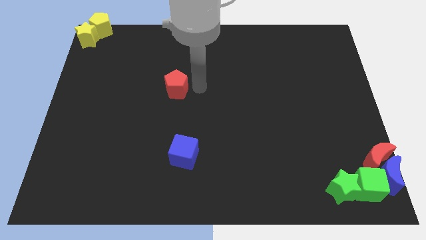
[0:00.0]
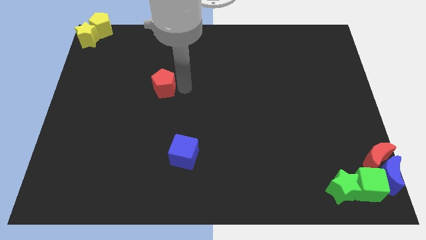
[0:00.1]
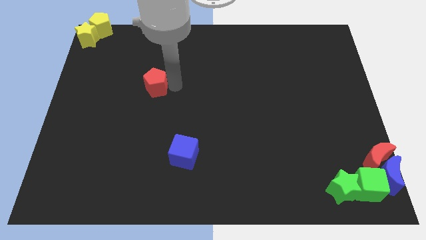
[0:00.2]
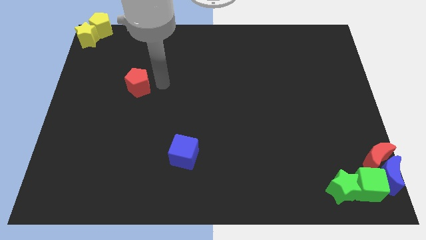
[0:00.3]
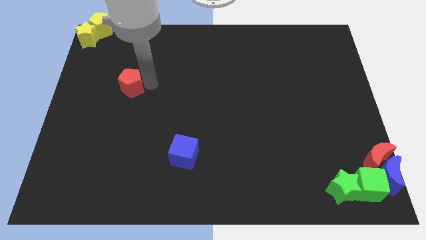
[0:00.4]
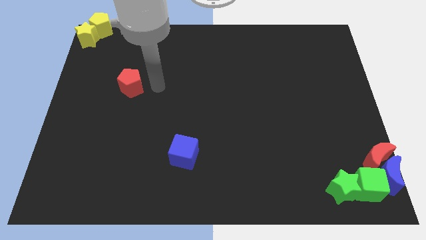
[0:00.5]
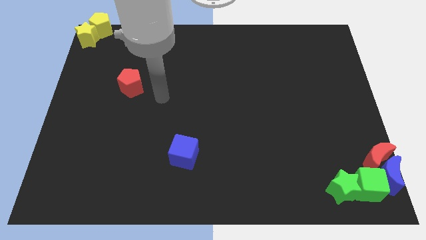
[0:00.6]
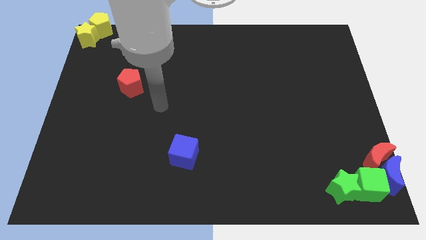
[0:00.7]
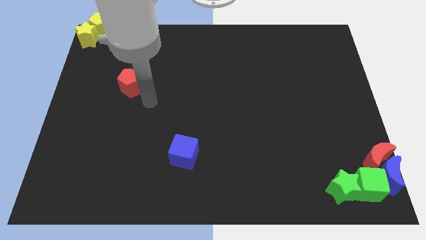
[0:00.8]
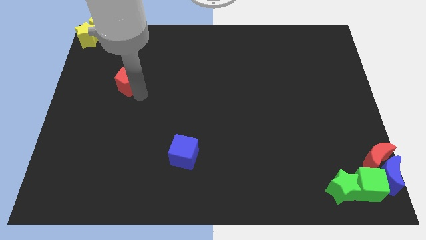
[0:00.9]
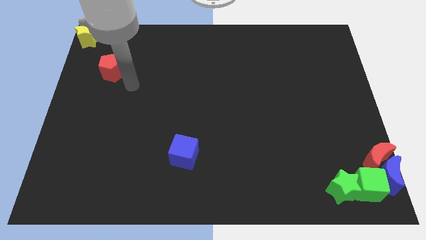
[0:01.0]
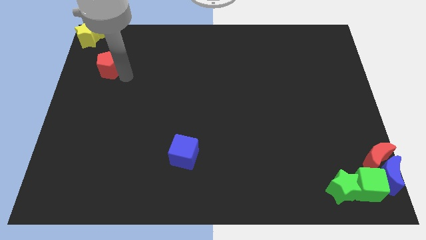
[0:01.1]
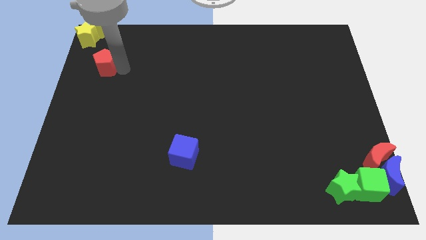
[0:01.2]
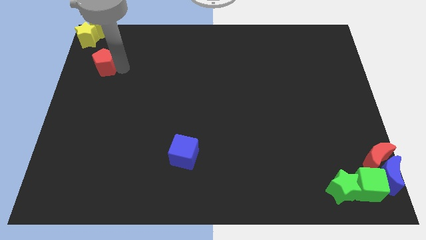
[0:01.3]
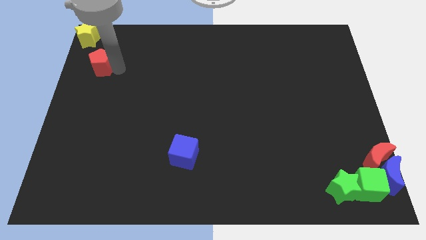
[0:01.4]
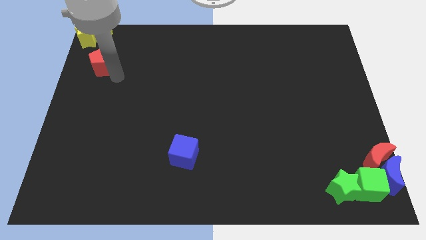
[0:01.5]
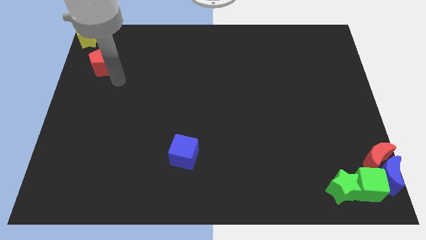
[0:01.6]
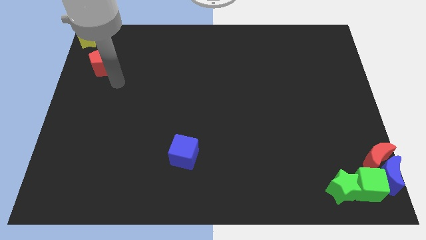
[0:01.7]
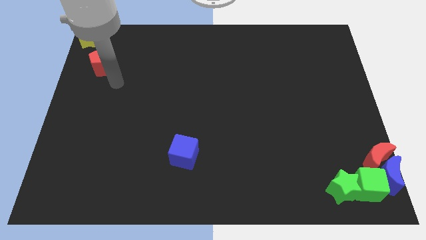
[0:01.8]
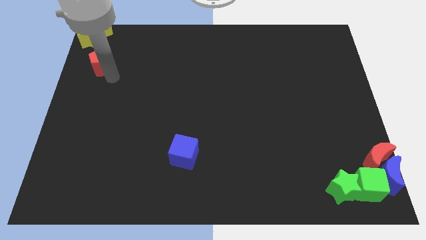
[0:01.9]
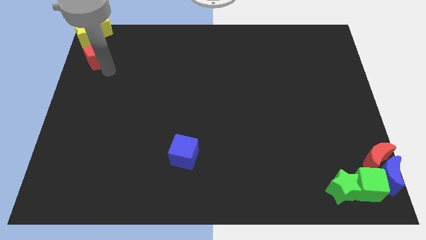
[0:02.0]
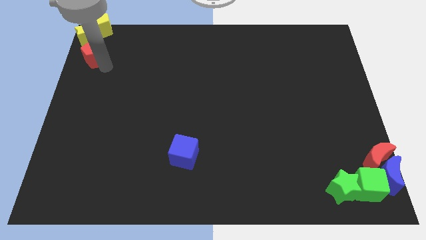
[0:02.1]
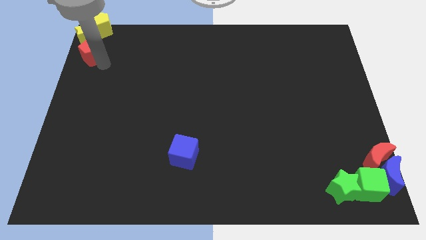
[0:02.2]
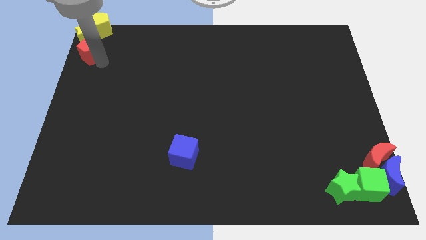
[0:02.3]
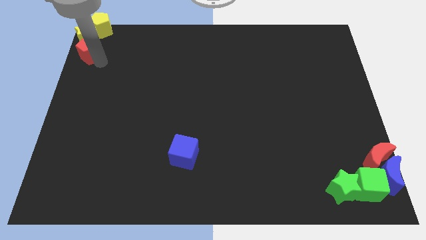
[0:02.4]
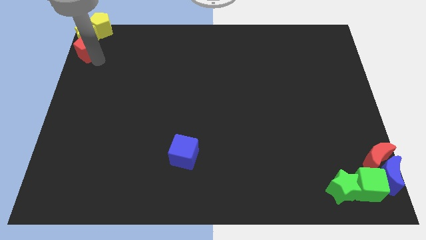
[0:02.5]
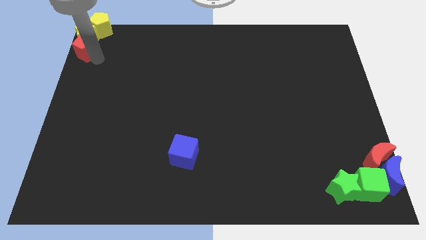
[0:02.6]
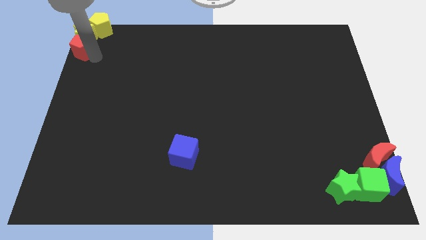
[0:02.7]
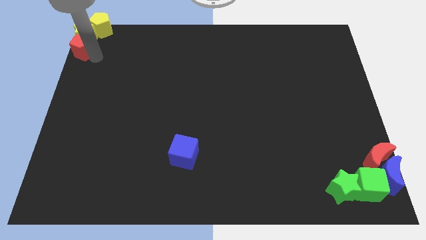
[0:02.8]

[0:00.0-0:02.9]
move red pentagon into yellow star

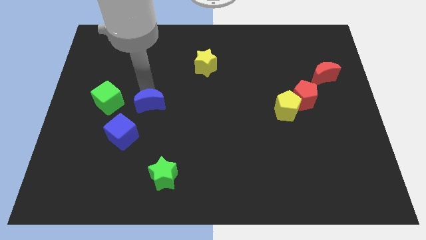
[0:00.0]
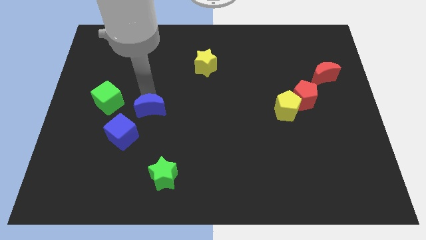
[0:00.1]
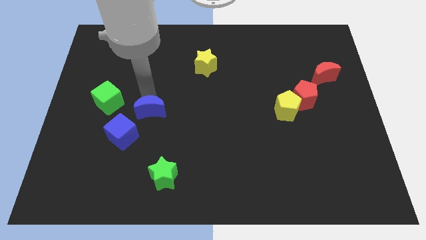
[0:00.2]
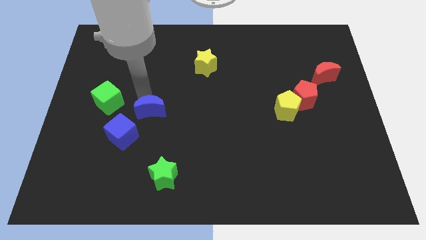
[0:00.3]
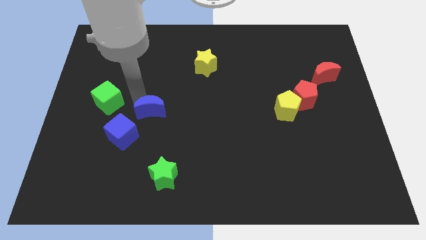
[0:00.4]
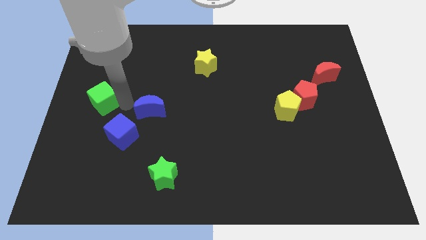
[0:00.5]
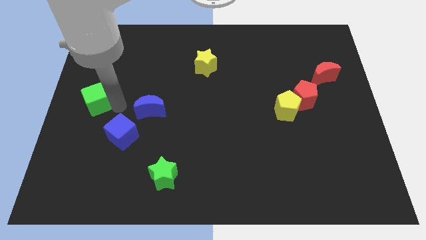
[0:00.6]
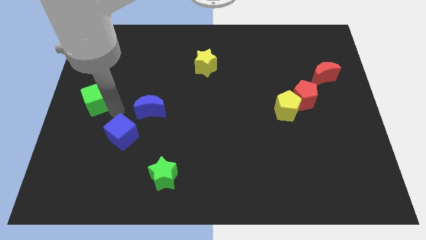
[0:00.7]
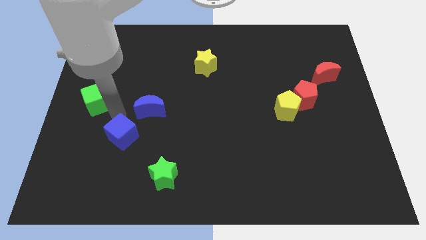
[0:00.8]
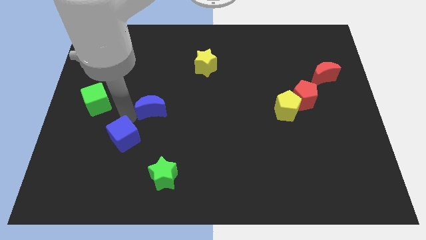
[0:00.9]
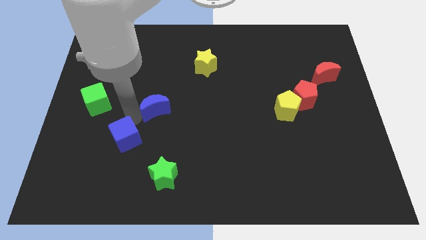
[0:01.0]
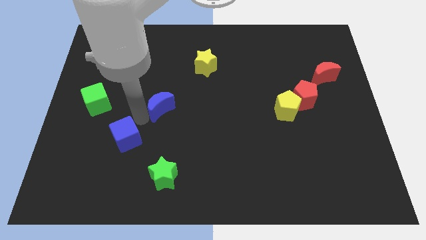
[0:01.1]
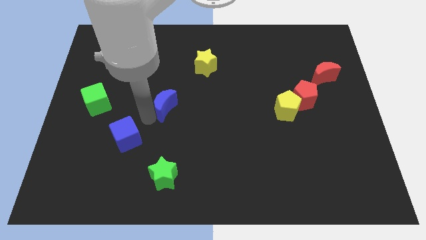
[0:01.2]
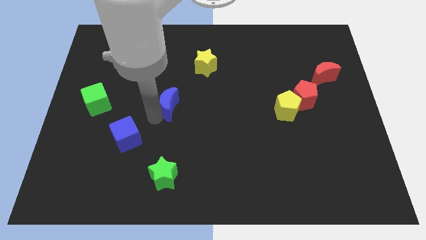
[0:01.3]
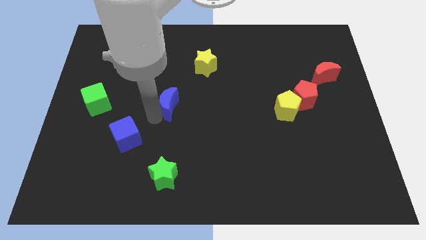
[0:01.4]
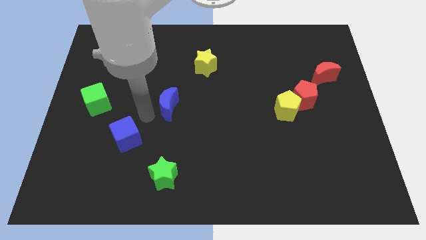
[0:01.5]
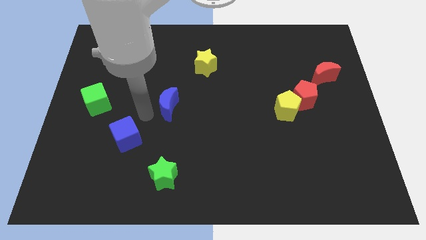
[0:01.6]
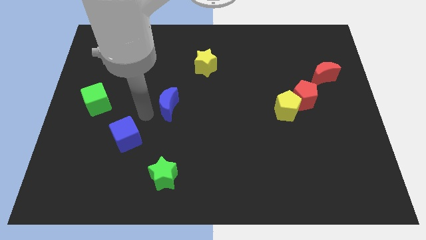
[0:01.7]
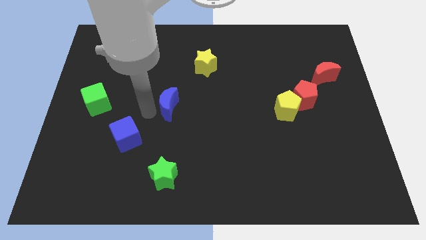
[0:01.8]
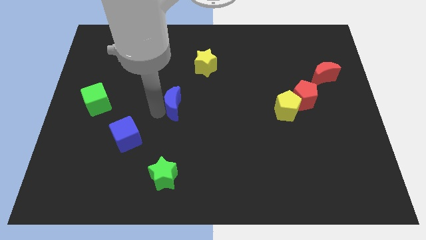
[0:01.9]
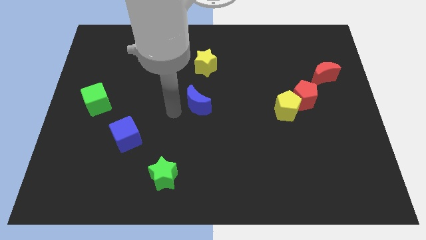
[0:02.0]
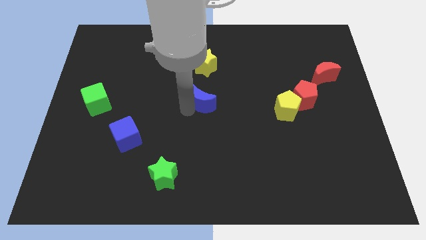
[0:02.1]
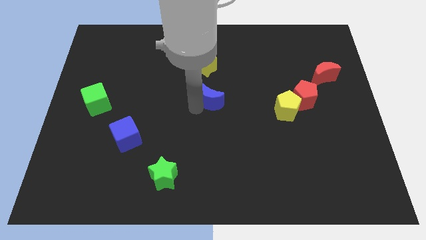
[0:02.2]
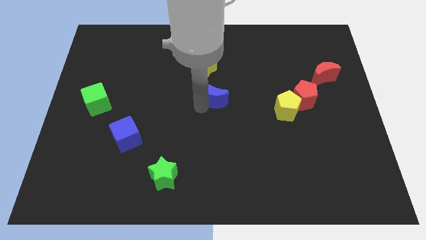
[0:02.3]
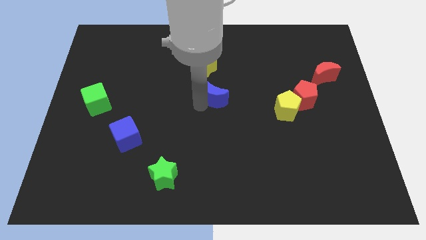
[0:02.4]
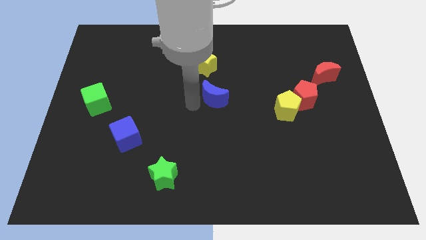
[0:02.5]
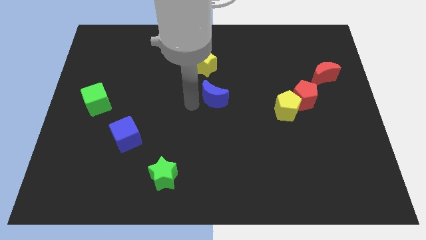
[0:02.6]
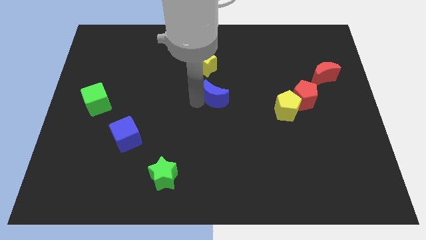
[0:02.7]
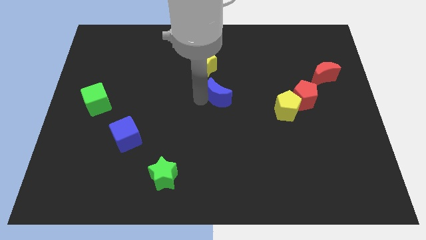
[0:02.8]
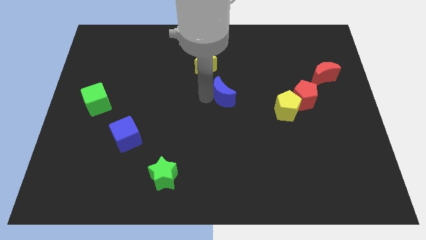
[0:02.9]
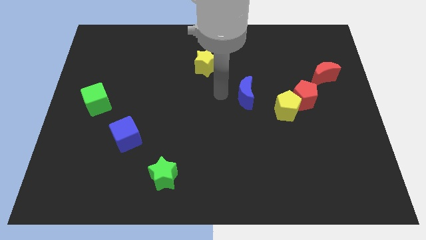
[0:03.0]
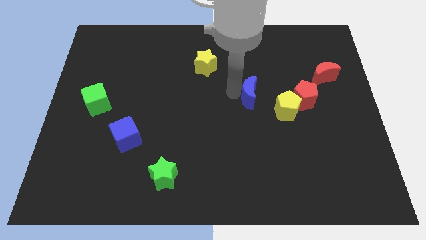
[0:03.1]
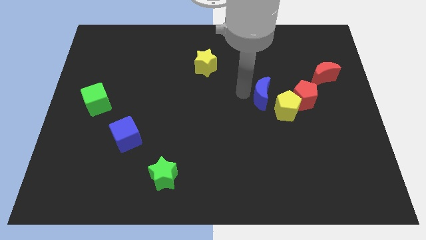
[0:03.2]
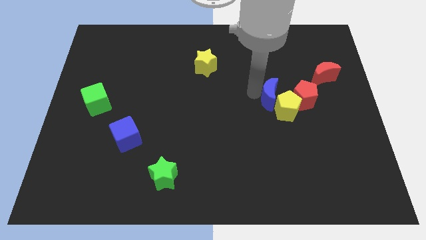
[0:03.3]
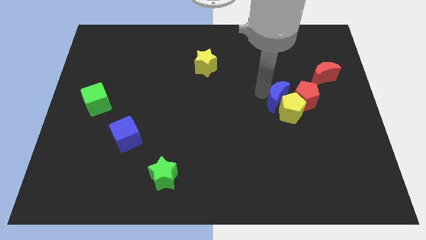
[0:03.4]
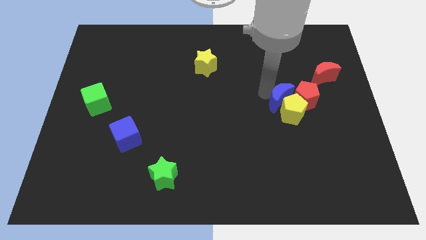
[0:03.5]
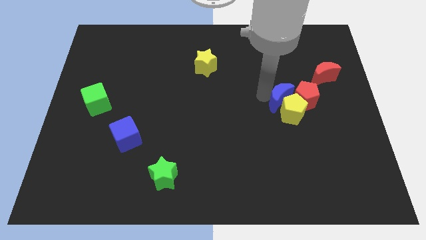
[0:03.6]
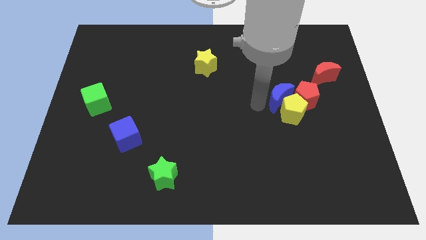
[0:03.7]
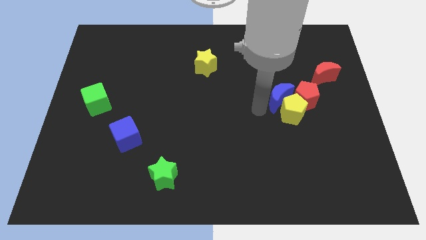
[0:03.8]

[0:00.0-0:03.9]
move the blue crescent into the group of blocks

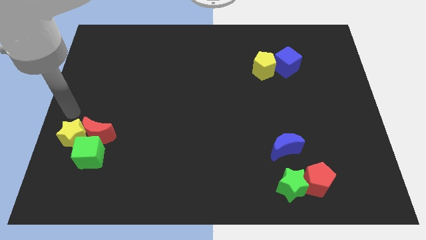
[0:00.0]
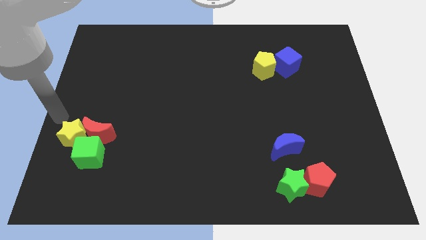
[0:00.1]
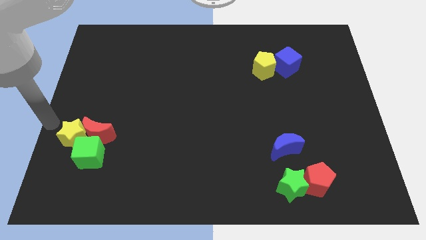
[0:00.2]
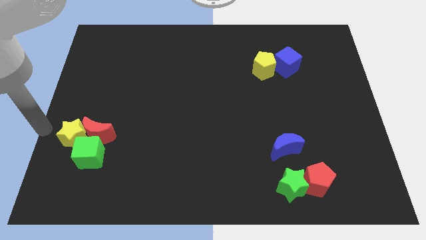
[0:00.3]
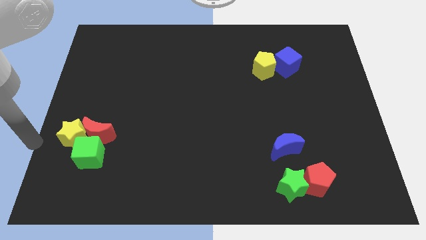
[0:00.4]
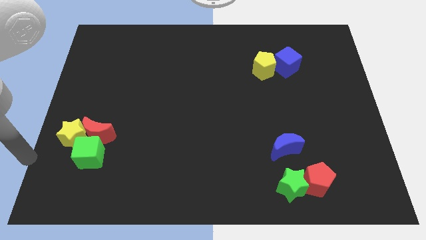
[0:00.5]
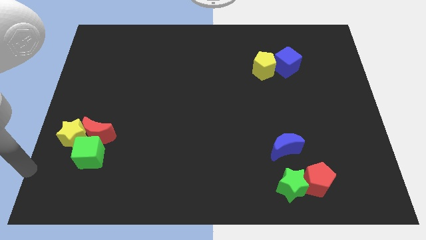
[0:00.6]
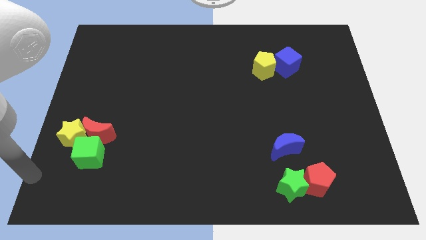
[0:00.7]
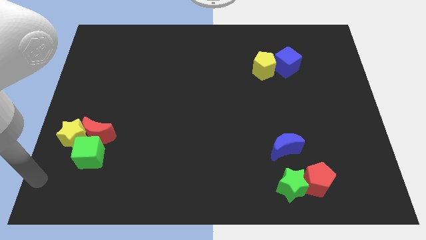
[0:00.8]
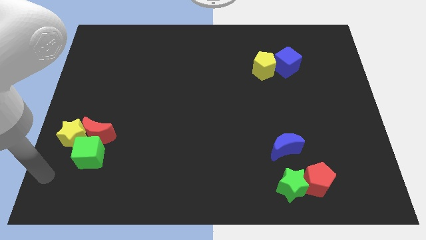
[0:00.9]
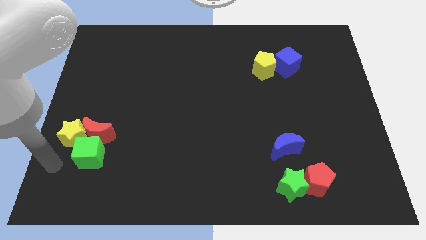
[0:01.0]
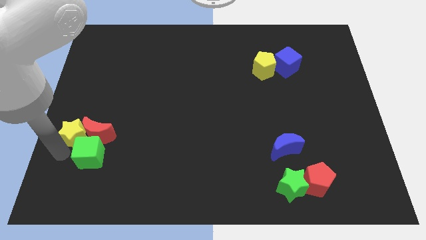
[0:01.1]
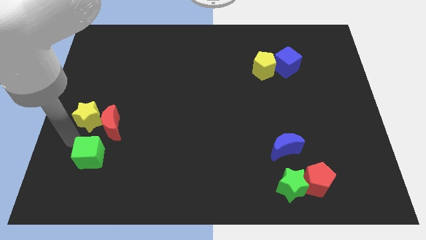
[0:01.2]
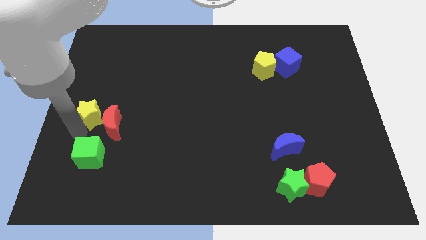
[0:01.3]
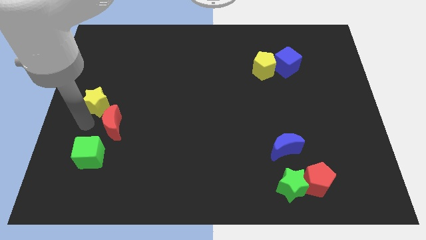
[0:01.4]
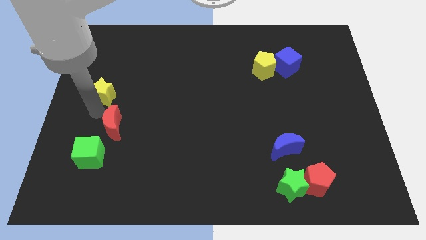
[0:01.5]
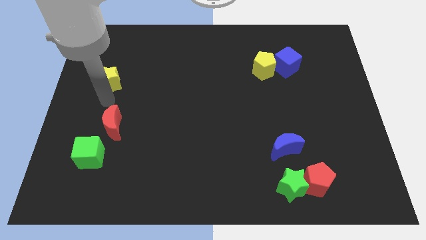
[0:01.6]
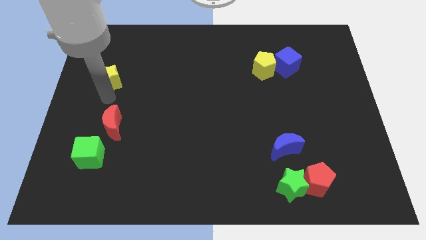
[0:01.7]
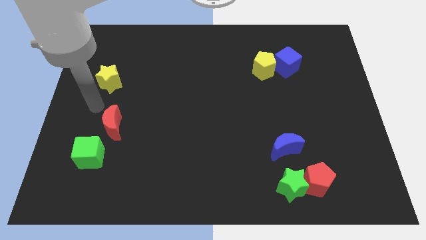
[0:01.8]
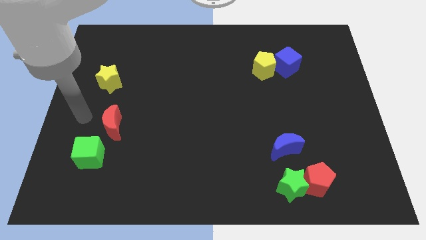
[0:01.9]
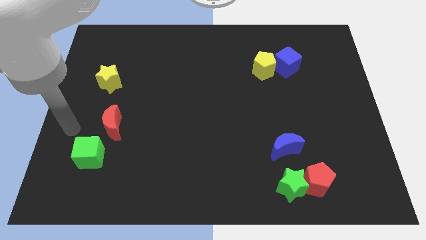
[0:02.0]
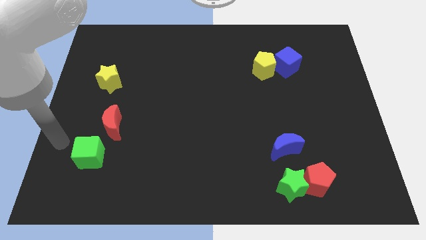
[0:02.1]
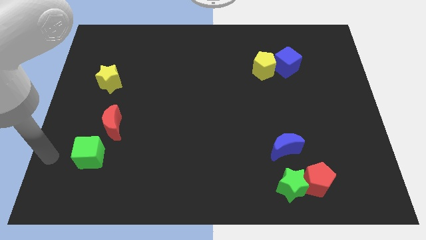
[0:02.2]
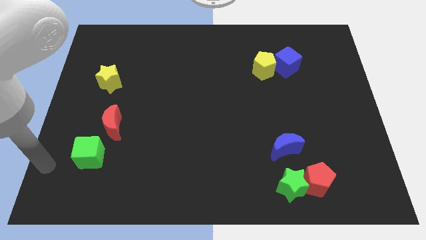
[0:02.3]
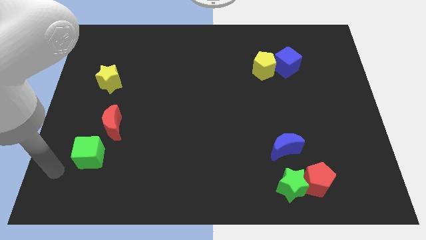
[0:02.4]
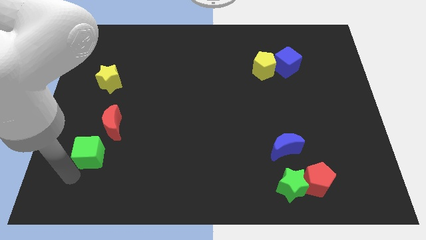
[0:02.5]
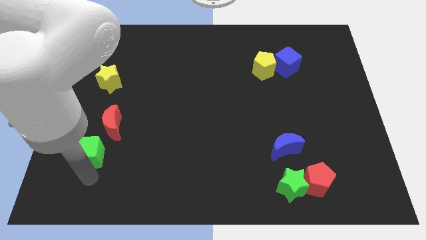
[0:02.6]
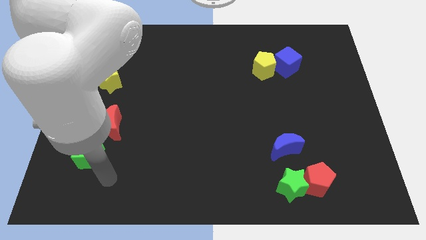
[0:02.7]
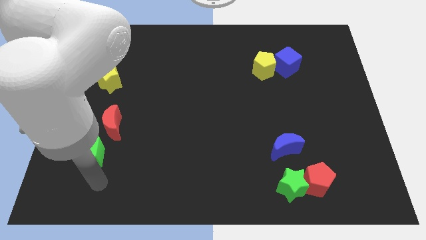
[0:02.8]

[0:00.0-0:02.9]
separate the green cube red moon and yellow star from each other
